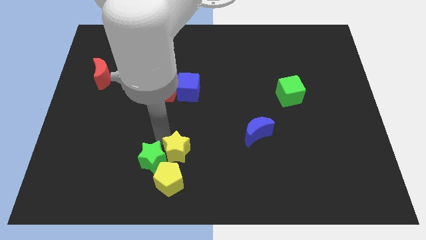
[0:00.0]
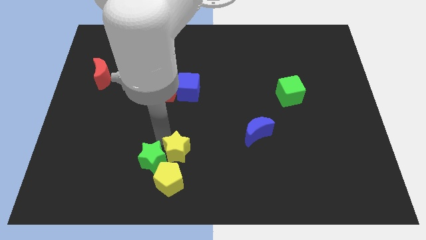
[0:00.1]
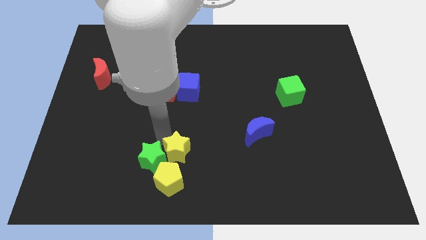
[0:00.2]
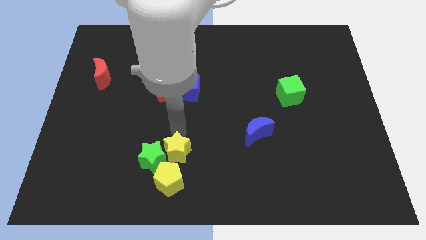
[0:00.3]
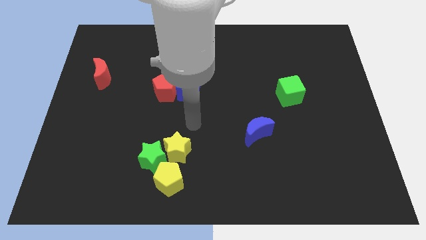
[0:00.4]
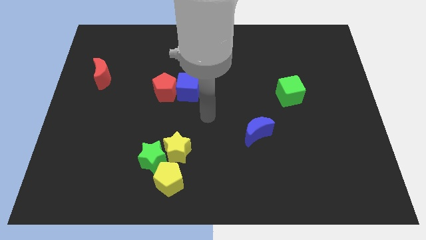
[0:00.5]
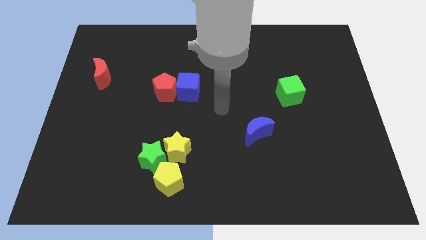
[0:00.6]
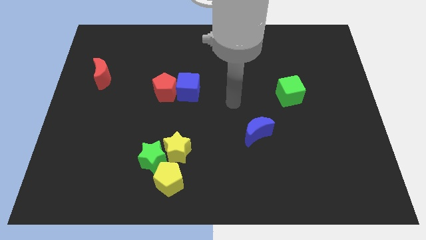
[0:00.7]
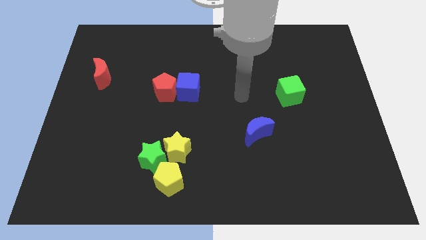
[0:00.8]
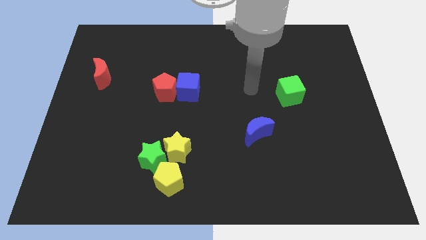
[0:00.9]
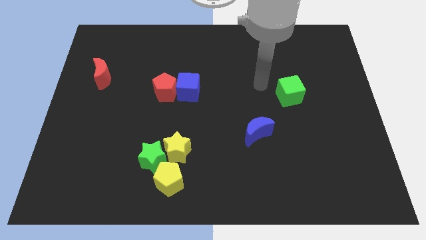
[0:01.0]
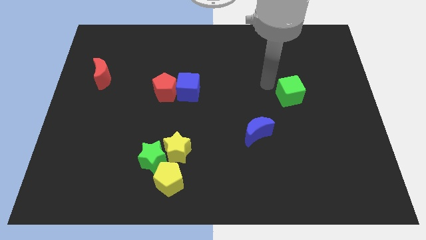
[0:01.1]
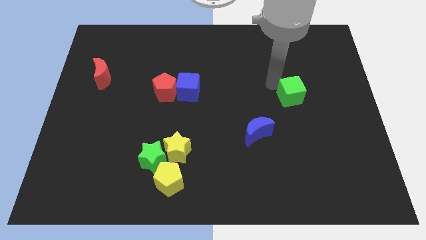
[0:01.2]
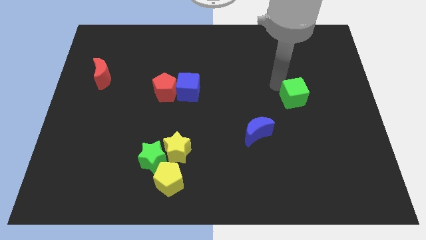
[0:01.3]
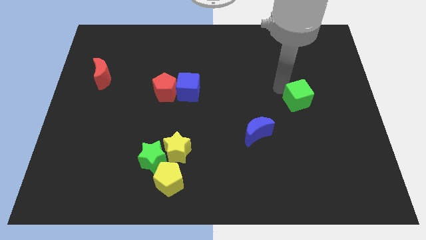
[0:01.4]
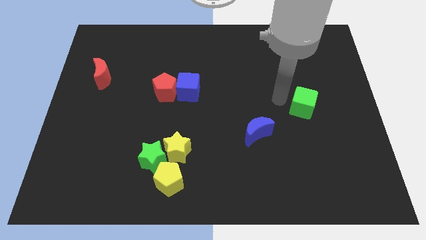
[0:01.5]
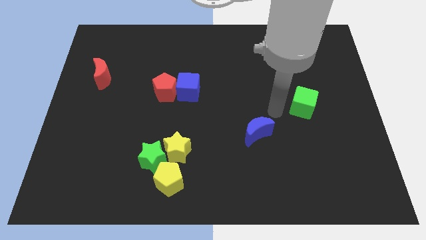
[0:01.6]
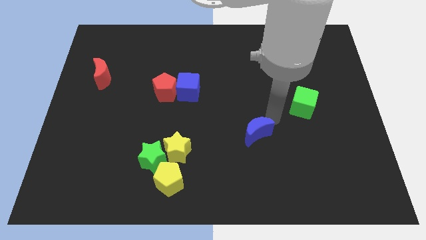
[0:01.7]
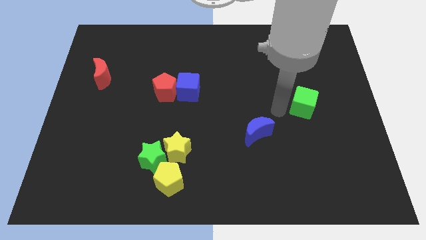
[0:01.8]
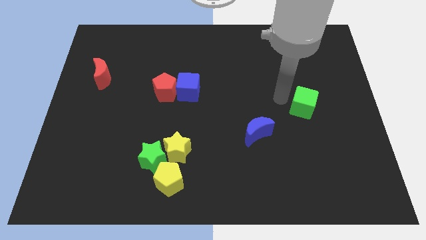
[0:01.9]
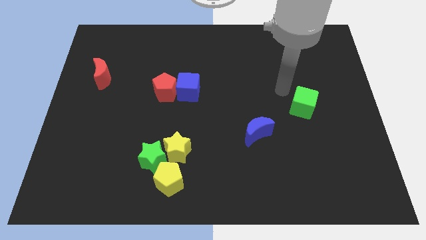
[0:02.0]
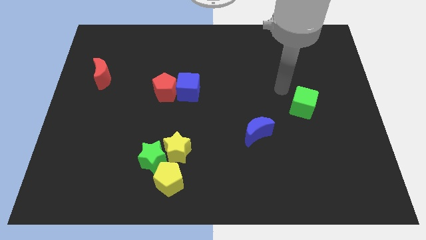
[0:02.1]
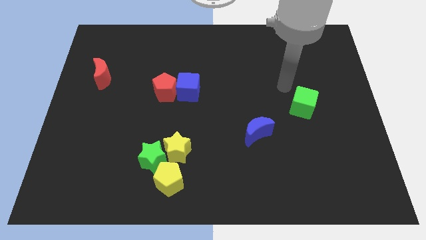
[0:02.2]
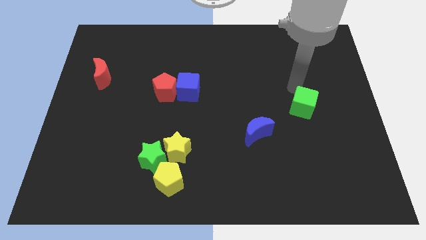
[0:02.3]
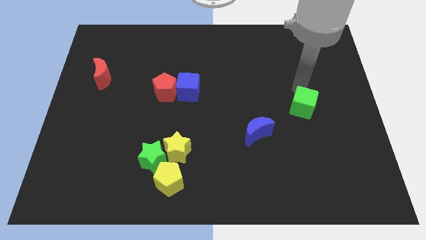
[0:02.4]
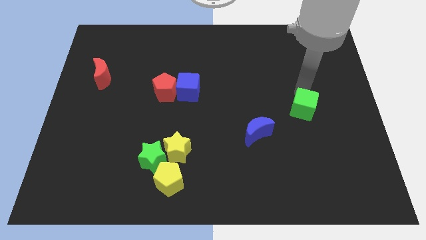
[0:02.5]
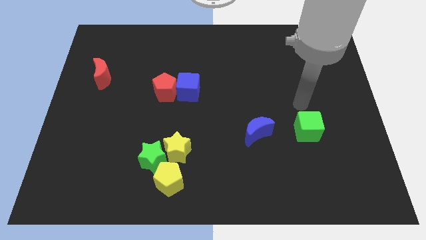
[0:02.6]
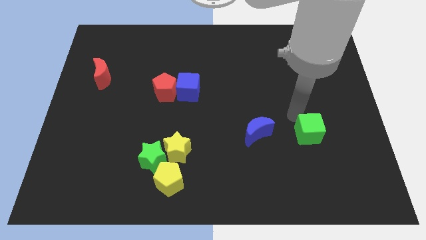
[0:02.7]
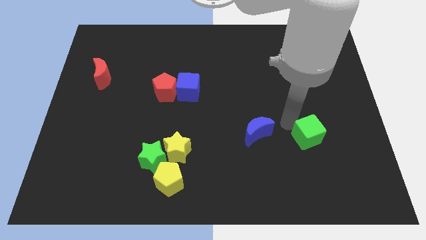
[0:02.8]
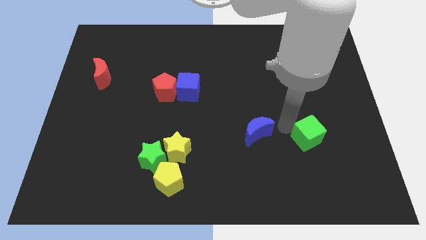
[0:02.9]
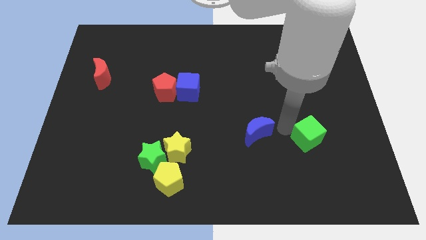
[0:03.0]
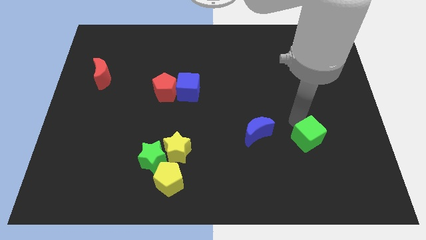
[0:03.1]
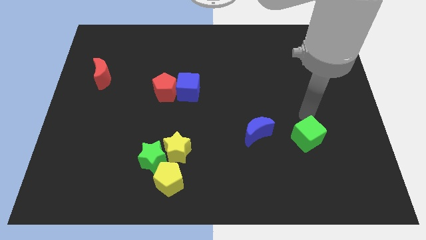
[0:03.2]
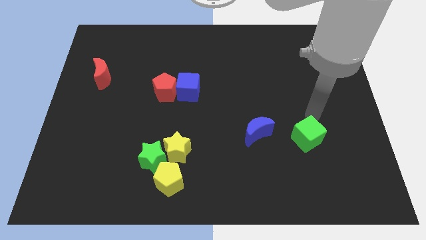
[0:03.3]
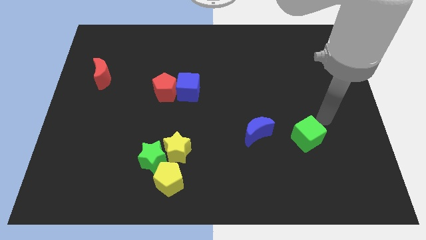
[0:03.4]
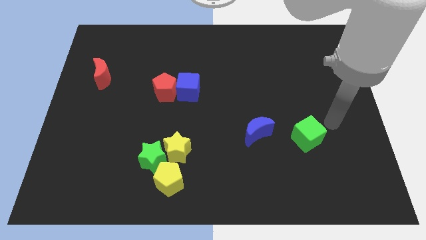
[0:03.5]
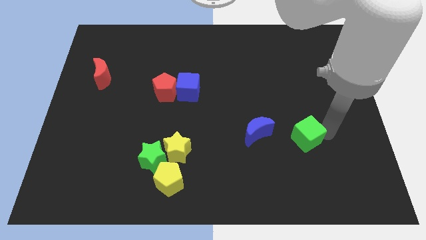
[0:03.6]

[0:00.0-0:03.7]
place green cube to the right of blue moon

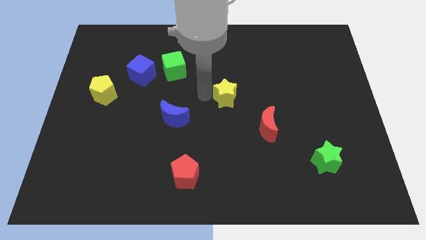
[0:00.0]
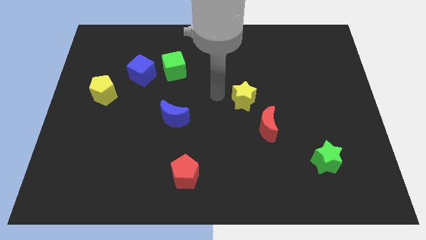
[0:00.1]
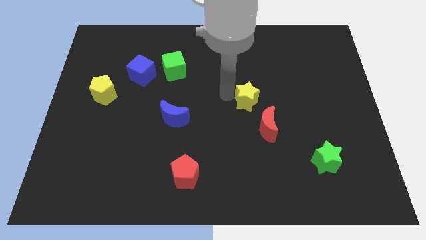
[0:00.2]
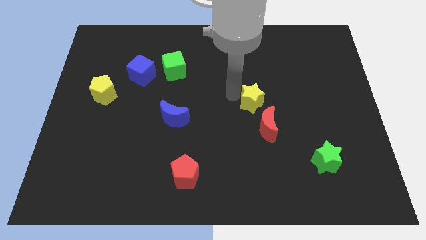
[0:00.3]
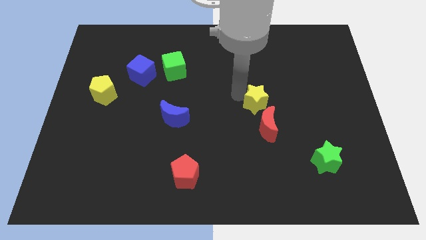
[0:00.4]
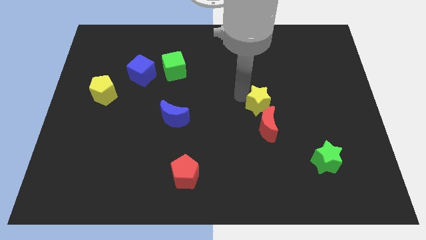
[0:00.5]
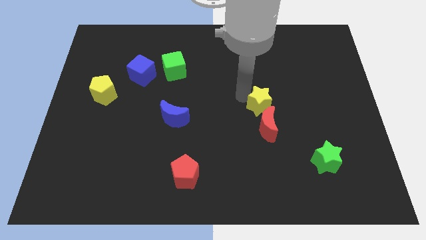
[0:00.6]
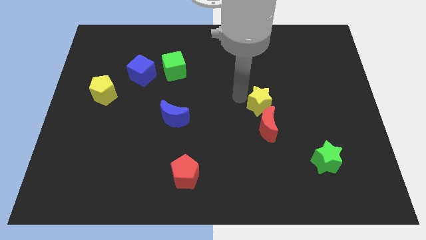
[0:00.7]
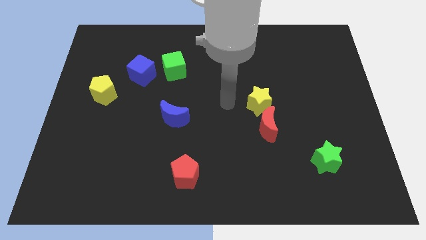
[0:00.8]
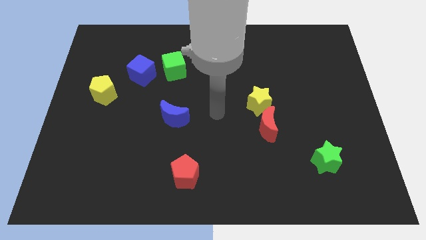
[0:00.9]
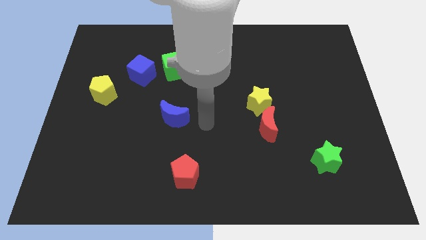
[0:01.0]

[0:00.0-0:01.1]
place the yellow star above the red moon

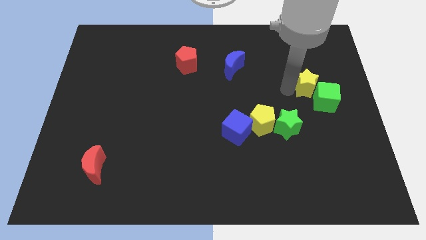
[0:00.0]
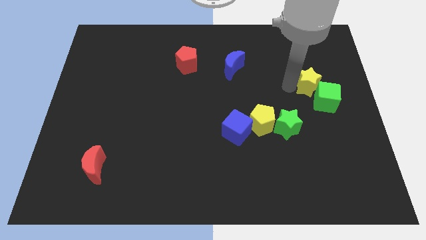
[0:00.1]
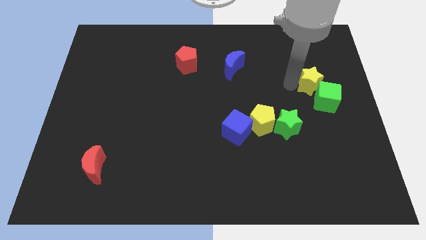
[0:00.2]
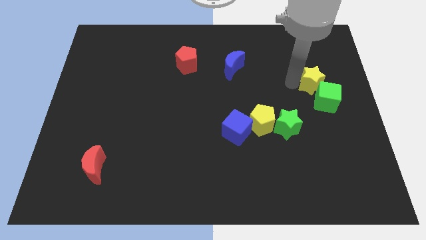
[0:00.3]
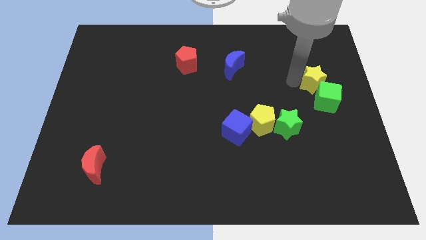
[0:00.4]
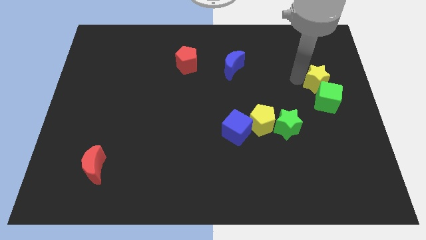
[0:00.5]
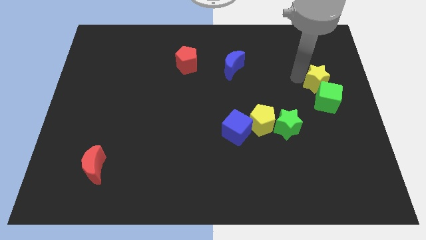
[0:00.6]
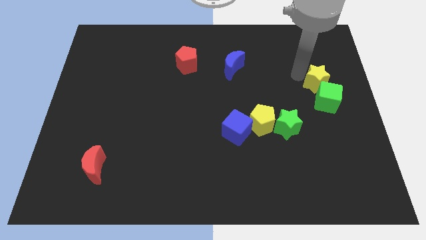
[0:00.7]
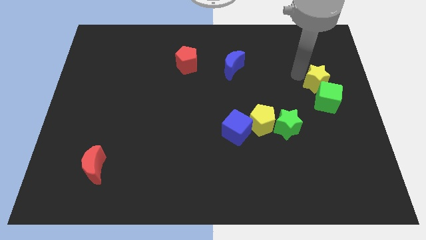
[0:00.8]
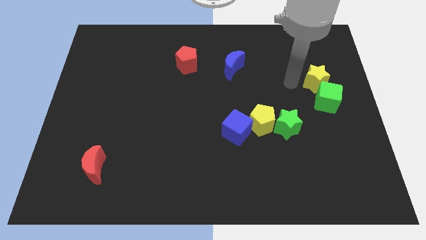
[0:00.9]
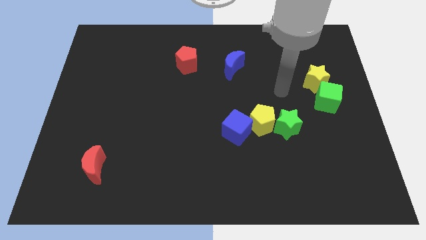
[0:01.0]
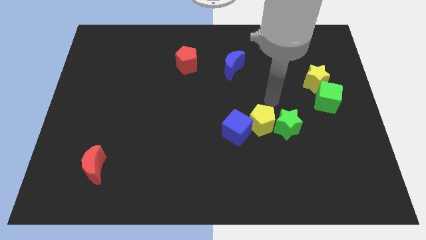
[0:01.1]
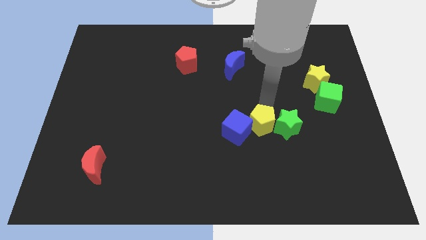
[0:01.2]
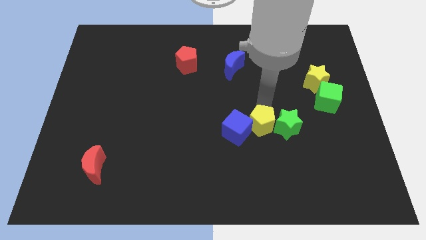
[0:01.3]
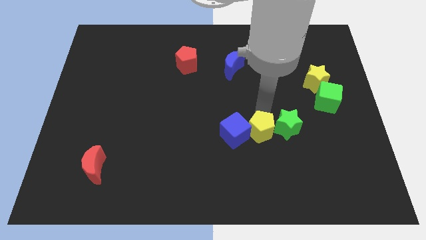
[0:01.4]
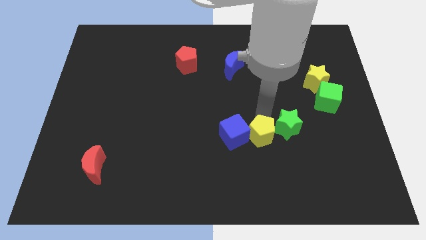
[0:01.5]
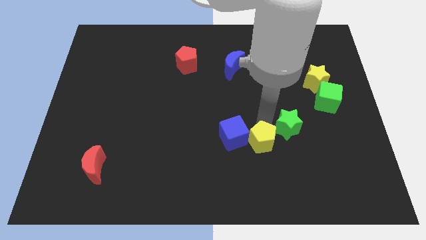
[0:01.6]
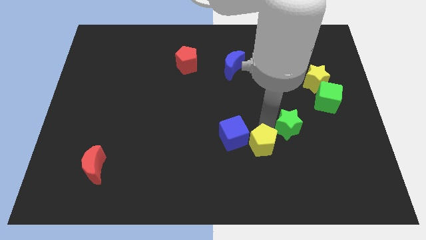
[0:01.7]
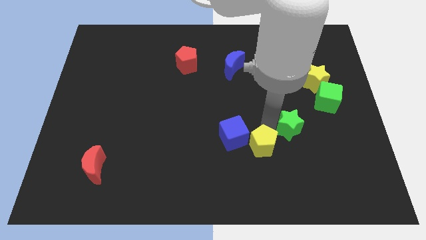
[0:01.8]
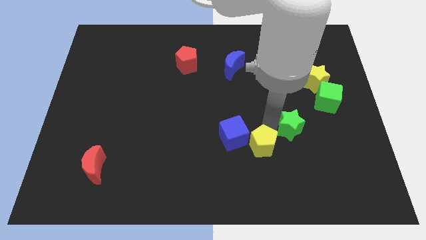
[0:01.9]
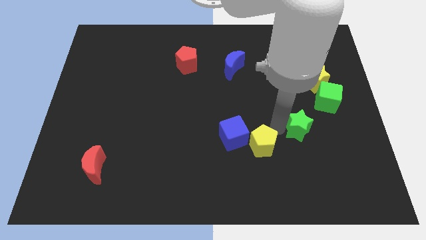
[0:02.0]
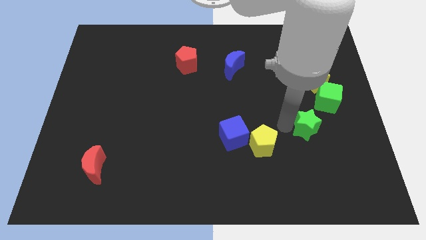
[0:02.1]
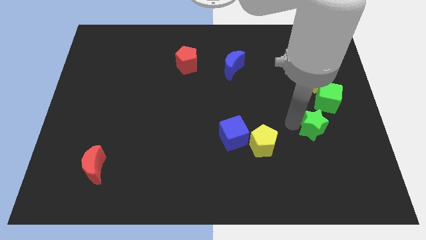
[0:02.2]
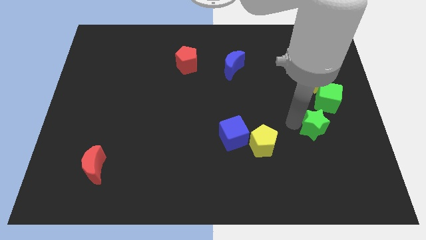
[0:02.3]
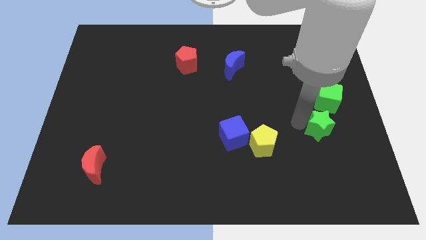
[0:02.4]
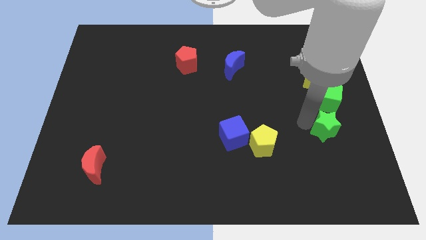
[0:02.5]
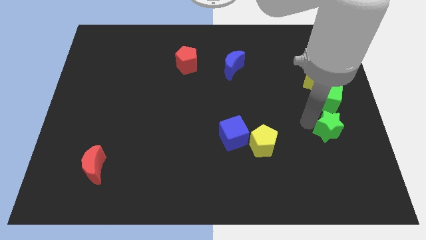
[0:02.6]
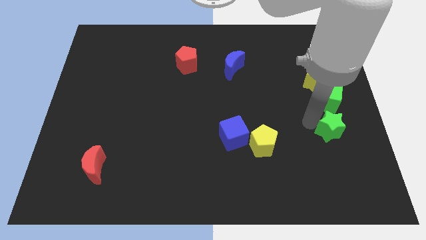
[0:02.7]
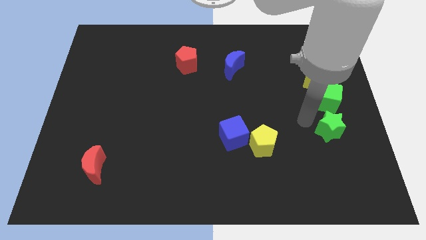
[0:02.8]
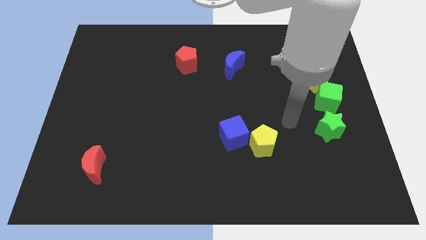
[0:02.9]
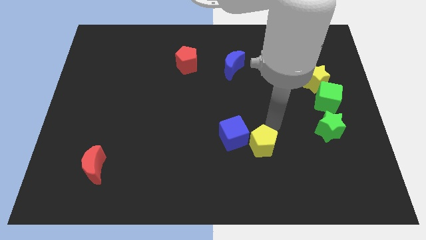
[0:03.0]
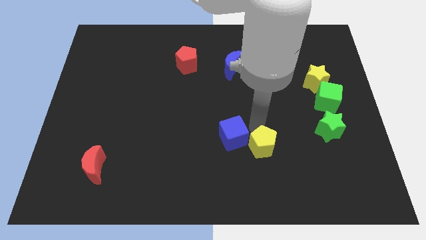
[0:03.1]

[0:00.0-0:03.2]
place the green star vertically below the green cube

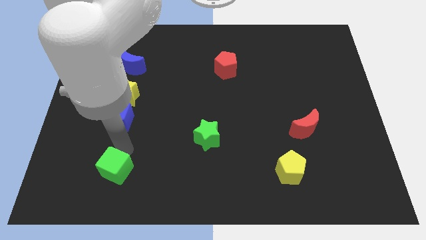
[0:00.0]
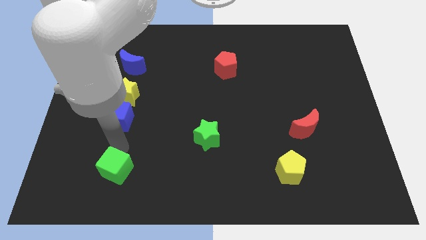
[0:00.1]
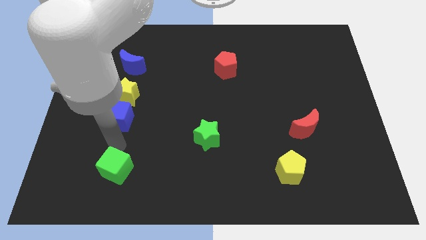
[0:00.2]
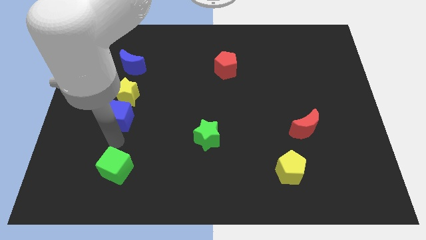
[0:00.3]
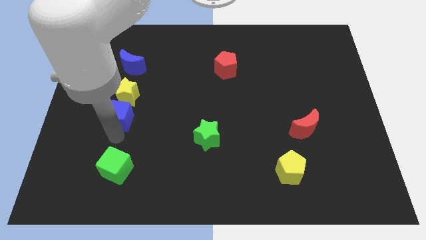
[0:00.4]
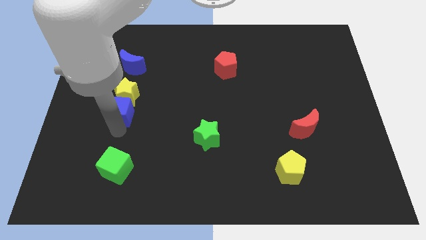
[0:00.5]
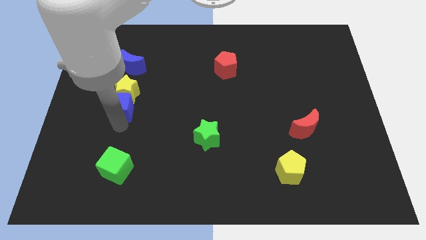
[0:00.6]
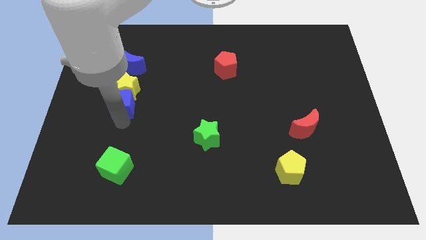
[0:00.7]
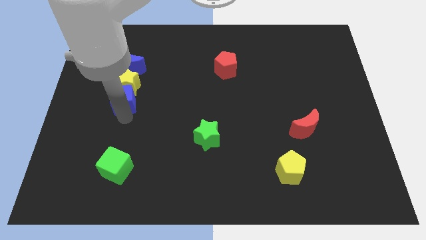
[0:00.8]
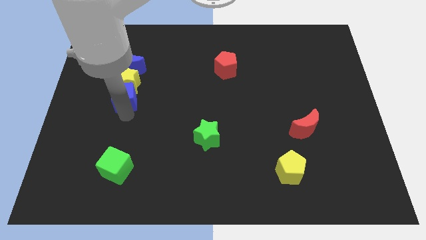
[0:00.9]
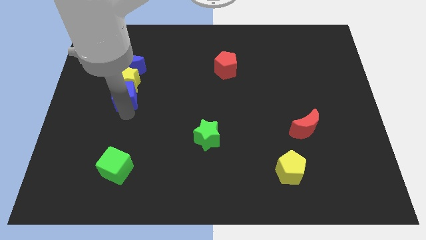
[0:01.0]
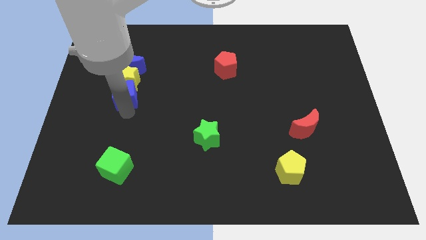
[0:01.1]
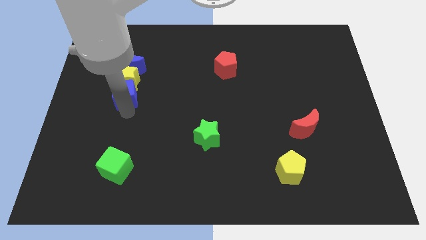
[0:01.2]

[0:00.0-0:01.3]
push the blue cube into the yellow star
